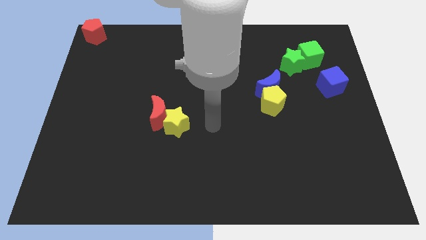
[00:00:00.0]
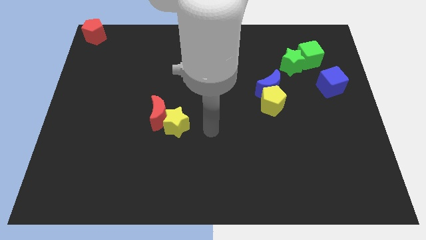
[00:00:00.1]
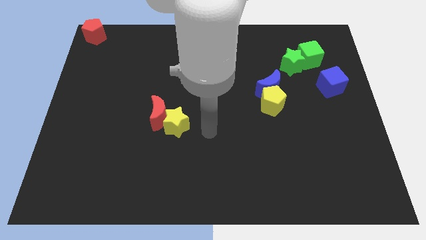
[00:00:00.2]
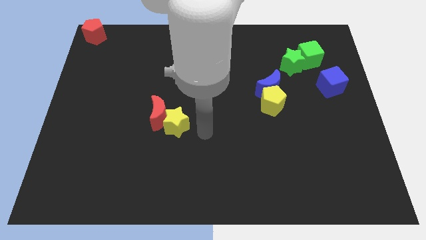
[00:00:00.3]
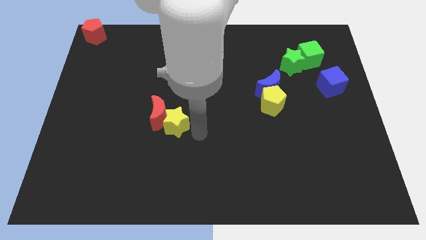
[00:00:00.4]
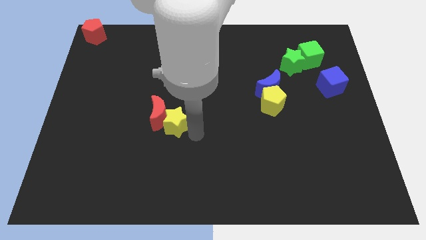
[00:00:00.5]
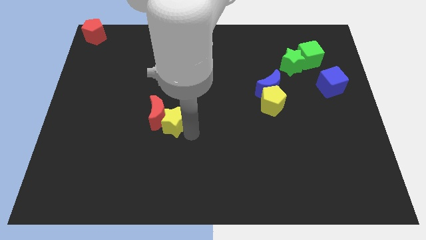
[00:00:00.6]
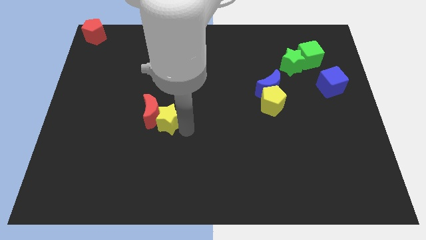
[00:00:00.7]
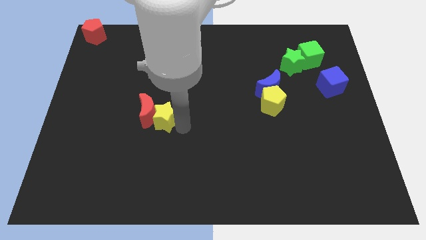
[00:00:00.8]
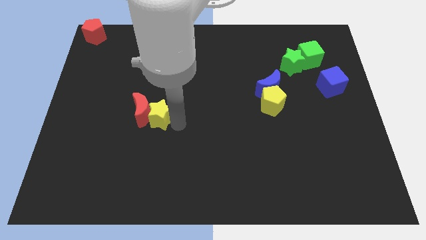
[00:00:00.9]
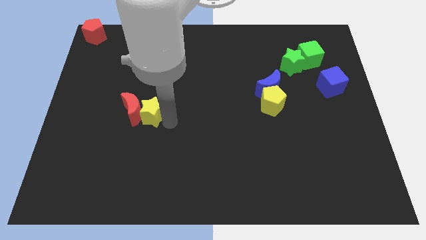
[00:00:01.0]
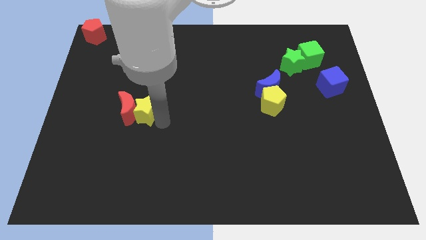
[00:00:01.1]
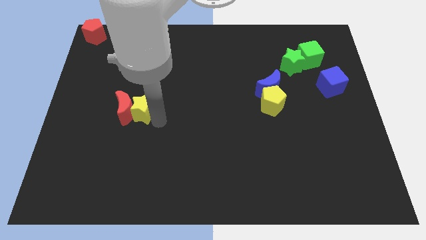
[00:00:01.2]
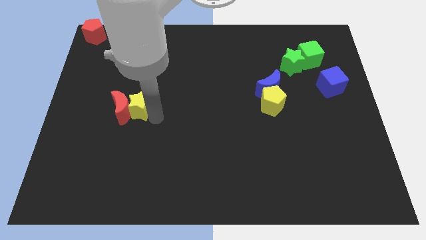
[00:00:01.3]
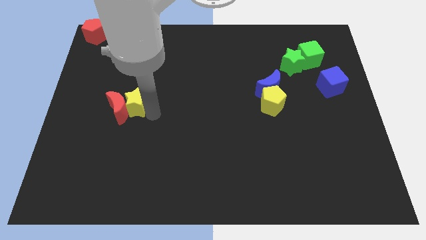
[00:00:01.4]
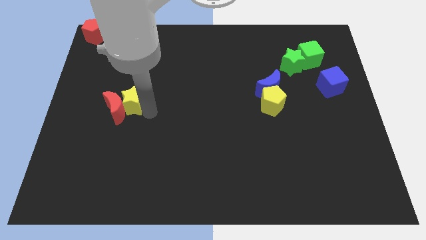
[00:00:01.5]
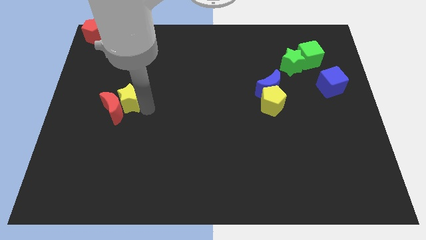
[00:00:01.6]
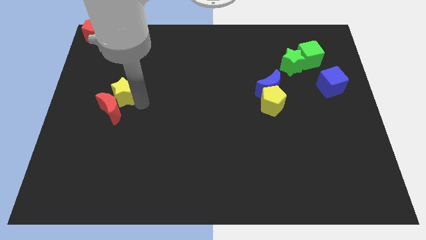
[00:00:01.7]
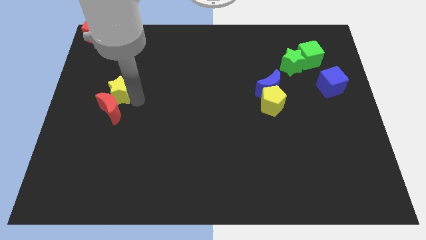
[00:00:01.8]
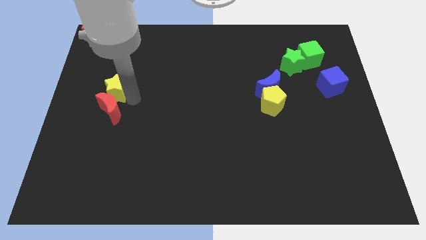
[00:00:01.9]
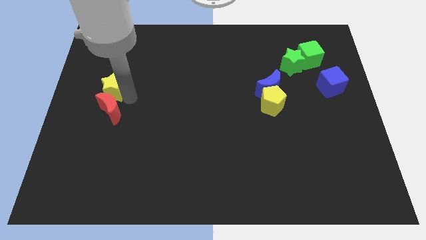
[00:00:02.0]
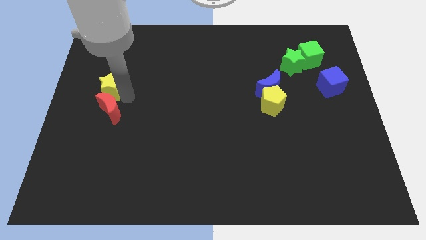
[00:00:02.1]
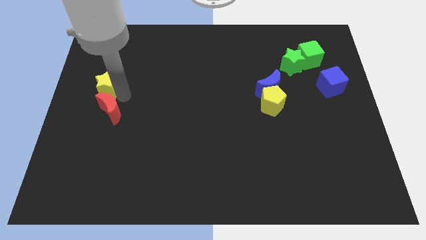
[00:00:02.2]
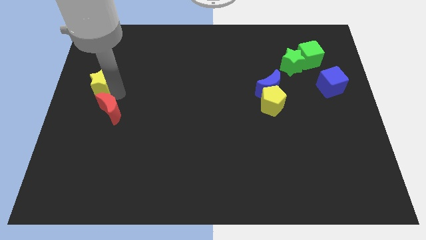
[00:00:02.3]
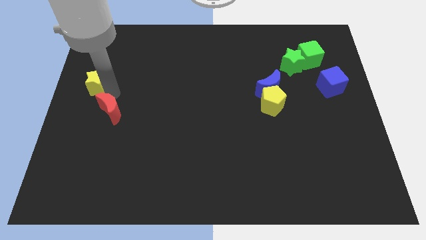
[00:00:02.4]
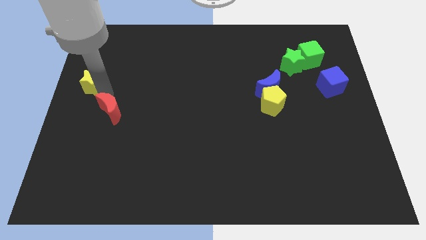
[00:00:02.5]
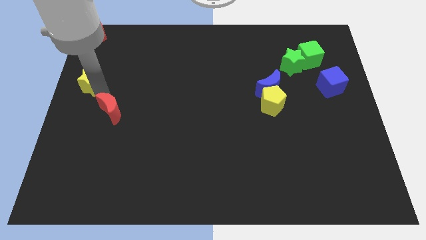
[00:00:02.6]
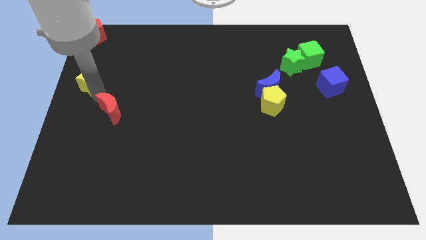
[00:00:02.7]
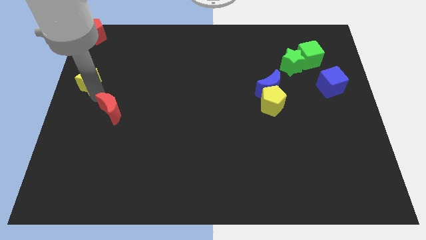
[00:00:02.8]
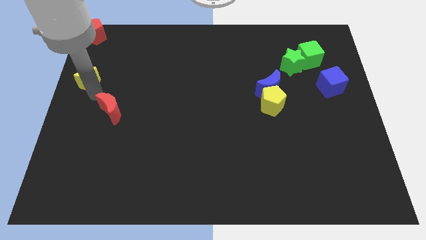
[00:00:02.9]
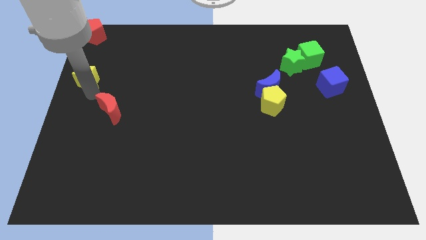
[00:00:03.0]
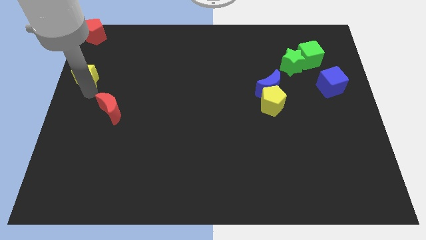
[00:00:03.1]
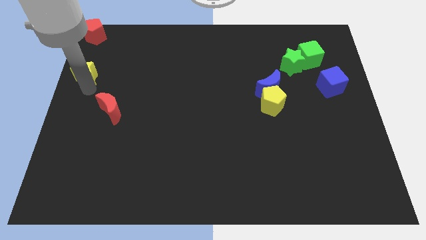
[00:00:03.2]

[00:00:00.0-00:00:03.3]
push the red moon with yellow star

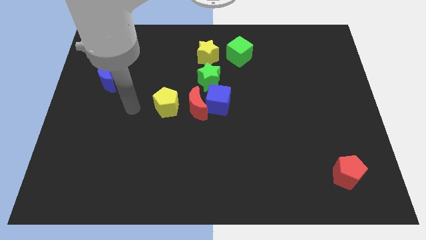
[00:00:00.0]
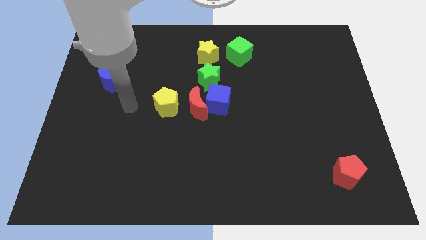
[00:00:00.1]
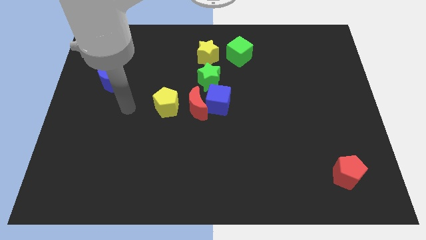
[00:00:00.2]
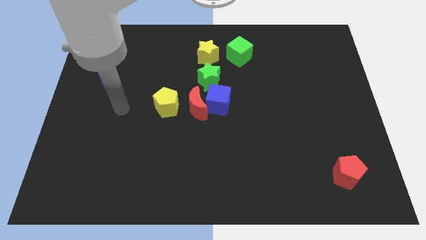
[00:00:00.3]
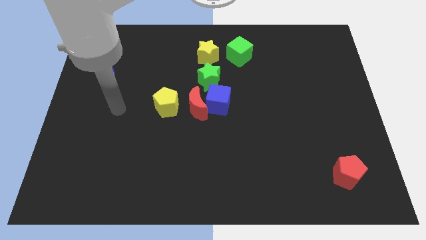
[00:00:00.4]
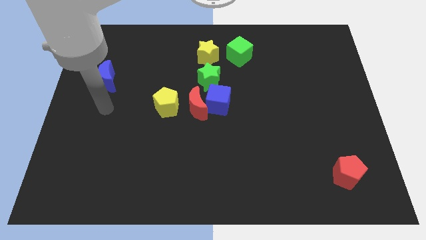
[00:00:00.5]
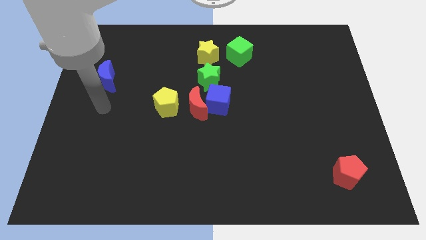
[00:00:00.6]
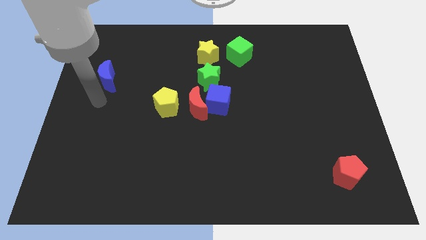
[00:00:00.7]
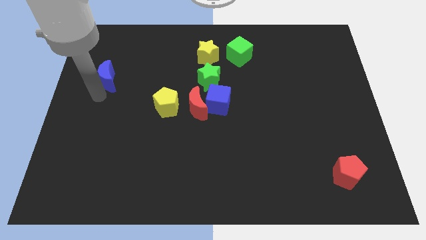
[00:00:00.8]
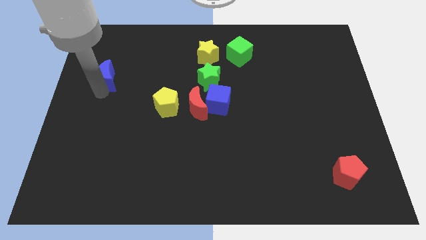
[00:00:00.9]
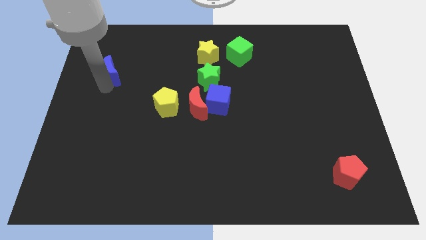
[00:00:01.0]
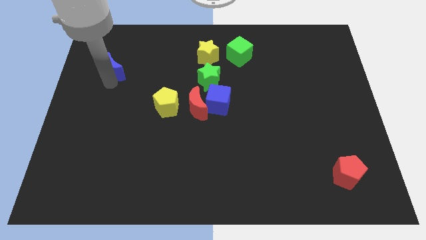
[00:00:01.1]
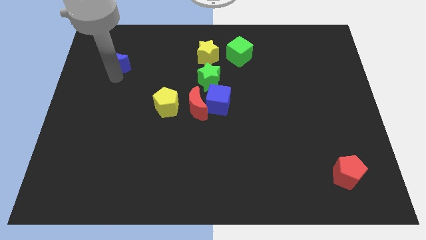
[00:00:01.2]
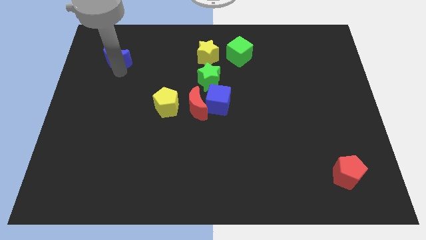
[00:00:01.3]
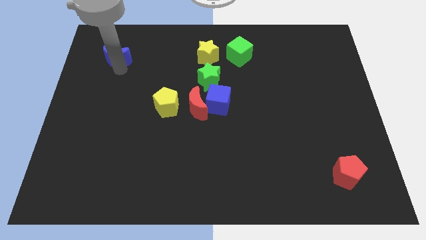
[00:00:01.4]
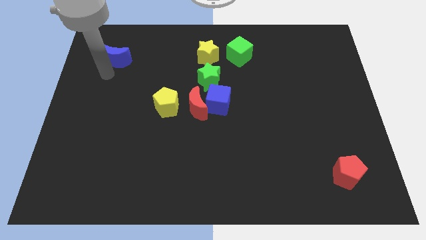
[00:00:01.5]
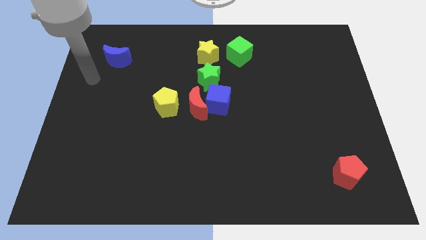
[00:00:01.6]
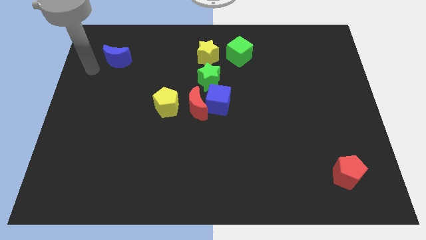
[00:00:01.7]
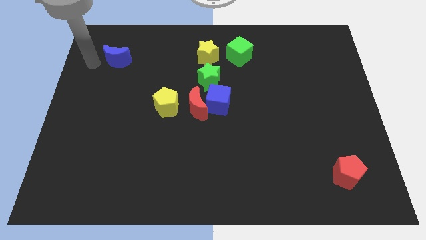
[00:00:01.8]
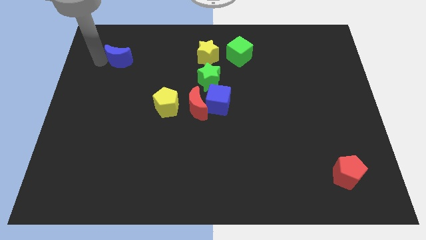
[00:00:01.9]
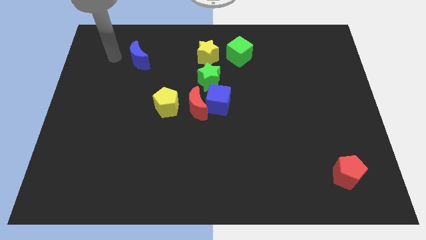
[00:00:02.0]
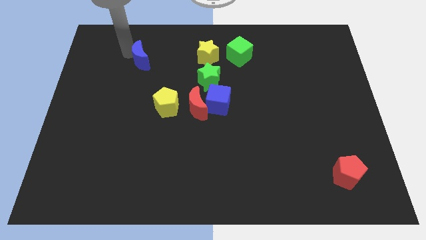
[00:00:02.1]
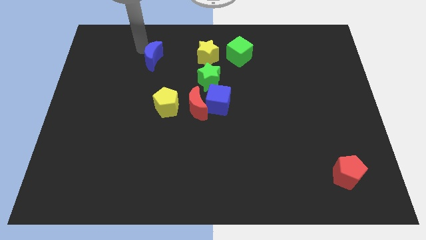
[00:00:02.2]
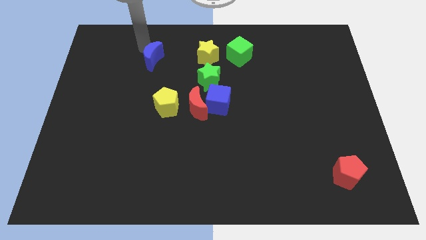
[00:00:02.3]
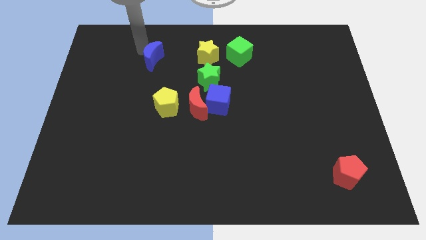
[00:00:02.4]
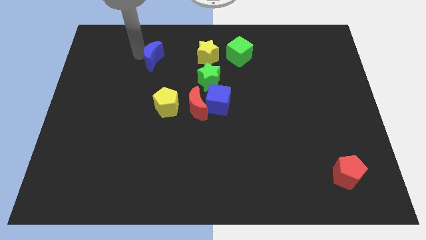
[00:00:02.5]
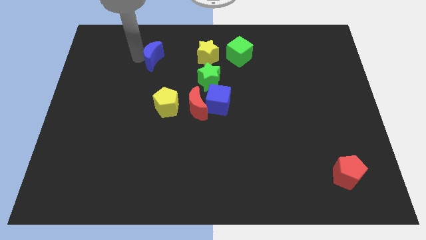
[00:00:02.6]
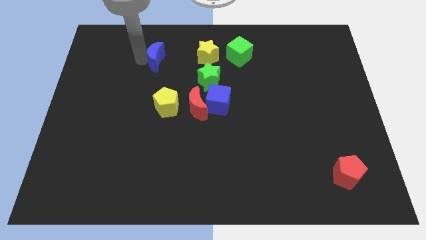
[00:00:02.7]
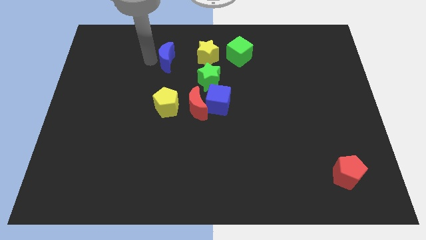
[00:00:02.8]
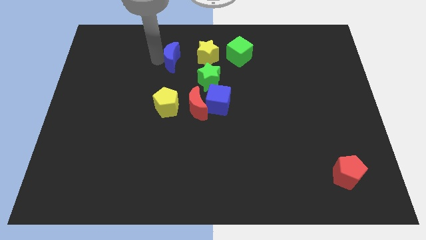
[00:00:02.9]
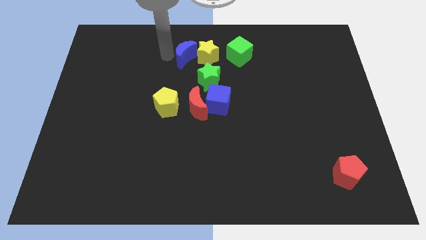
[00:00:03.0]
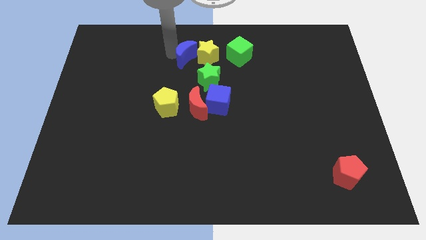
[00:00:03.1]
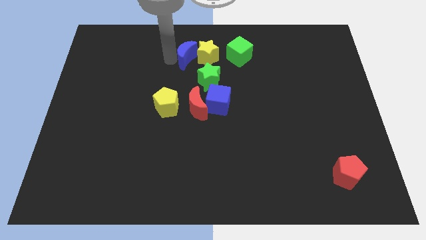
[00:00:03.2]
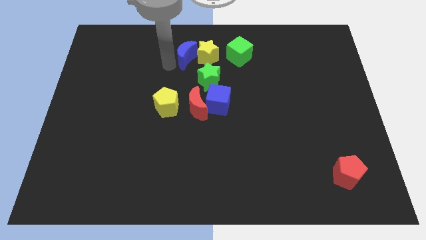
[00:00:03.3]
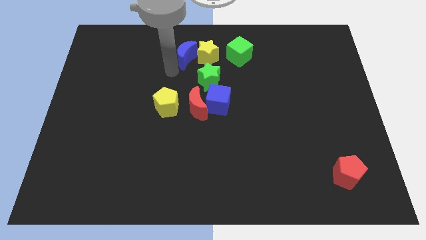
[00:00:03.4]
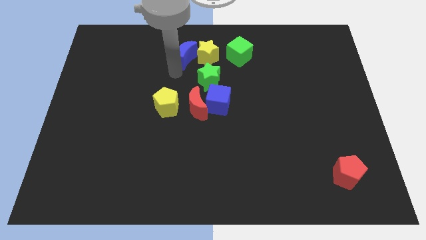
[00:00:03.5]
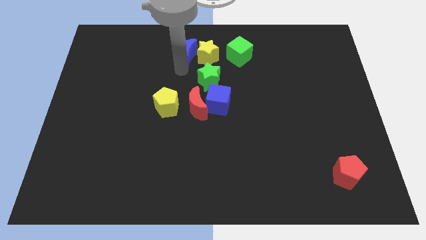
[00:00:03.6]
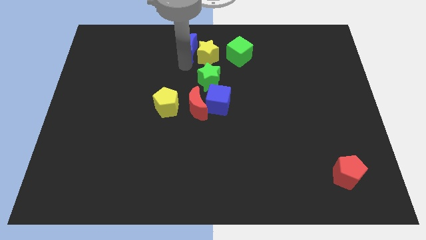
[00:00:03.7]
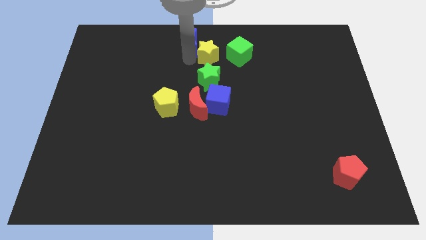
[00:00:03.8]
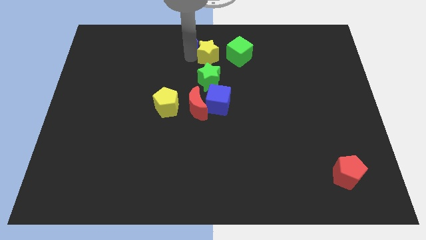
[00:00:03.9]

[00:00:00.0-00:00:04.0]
push the blue moon close to the yellow star

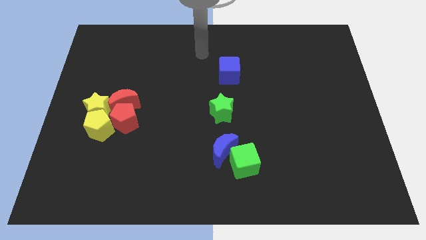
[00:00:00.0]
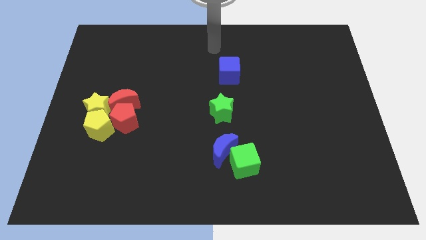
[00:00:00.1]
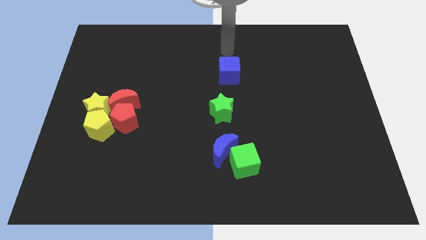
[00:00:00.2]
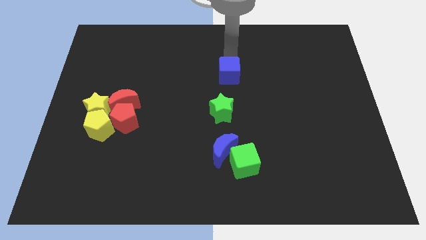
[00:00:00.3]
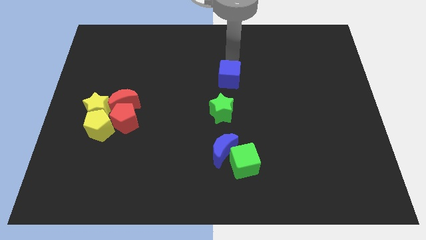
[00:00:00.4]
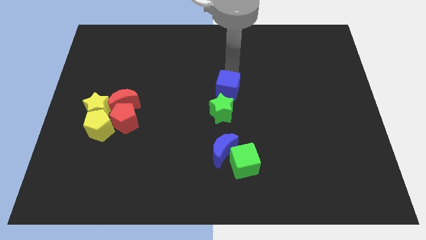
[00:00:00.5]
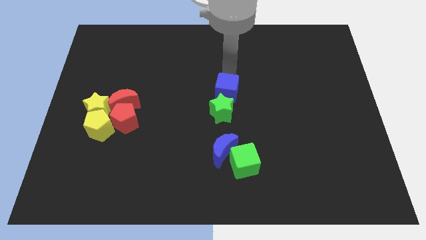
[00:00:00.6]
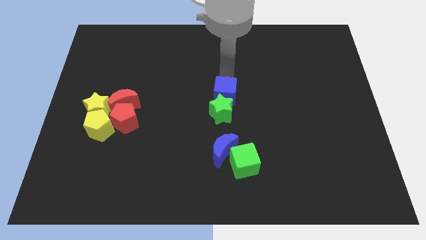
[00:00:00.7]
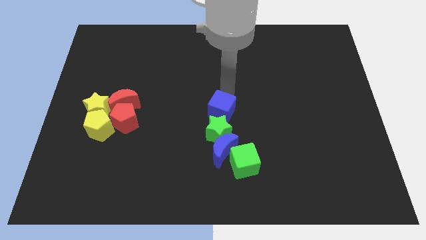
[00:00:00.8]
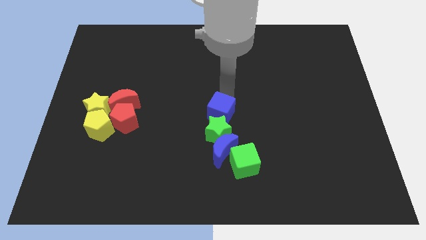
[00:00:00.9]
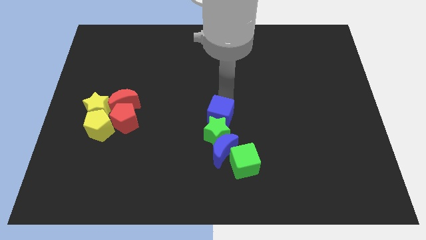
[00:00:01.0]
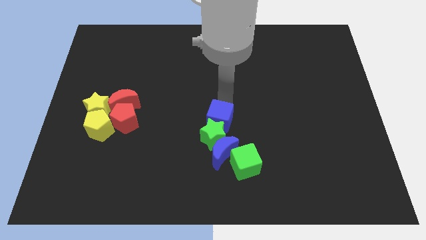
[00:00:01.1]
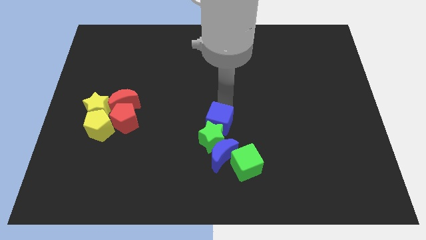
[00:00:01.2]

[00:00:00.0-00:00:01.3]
push the blue cube into the green star
